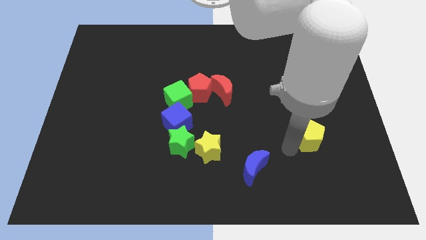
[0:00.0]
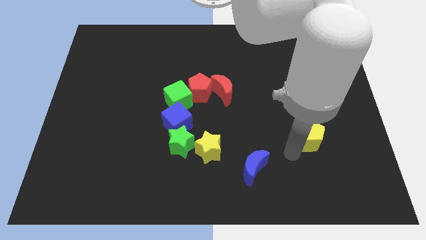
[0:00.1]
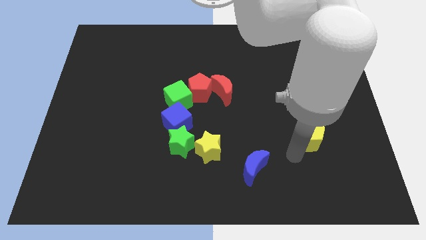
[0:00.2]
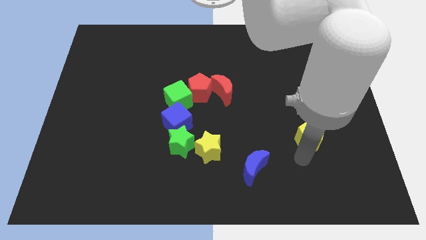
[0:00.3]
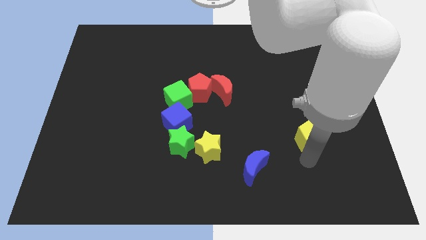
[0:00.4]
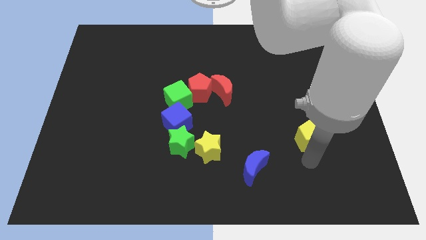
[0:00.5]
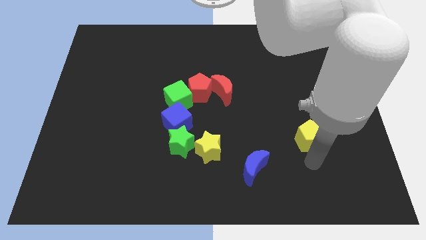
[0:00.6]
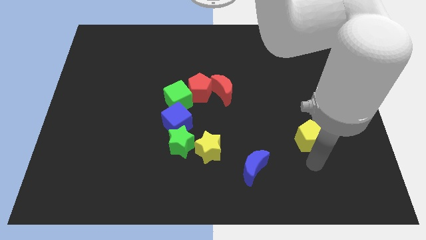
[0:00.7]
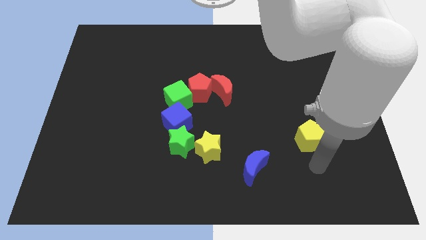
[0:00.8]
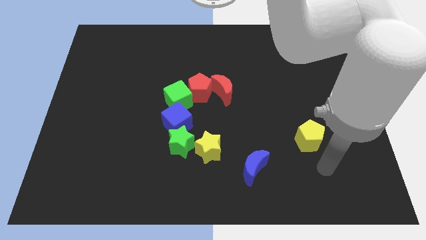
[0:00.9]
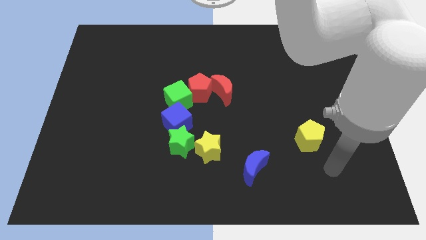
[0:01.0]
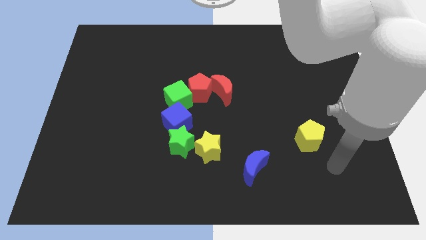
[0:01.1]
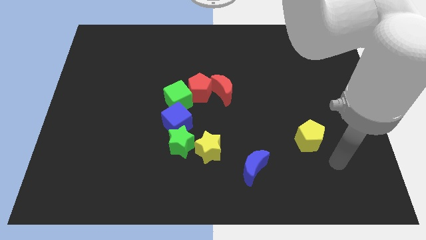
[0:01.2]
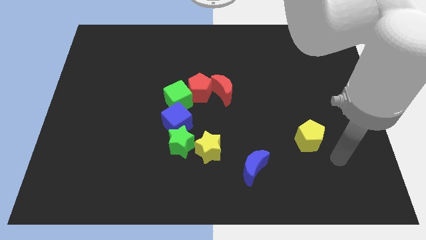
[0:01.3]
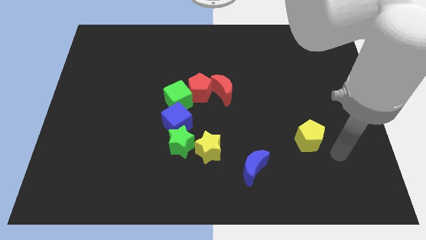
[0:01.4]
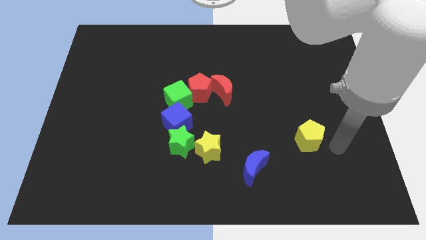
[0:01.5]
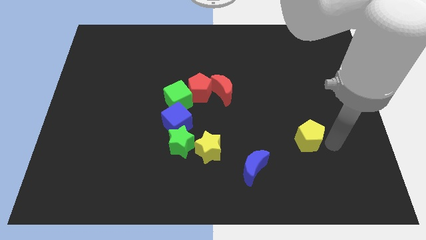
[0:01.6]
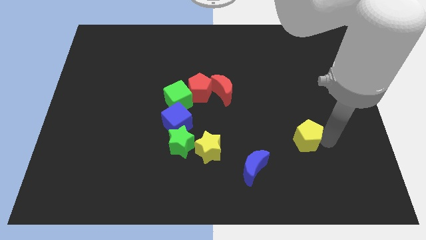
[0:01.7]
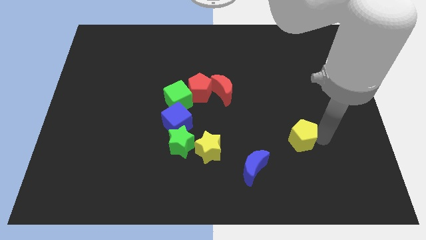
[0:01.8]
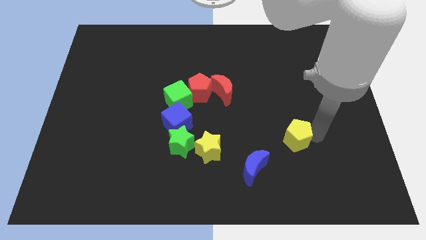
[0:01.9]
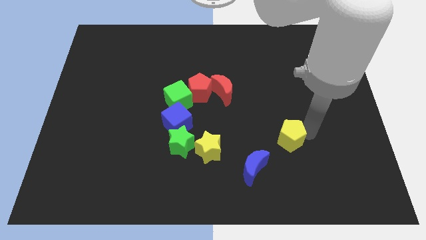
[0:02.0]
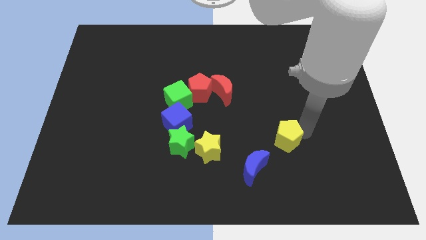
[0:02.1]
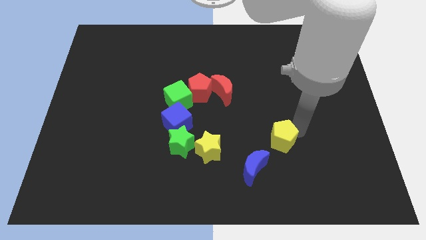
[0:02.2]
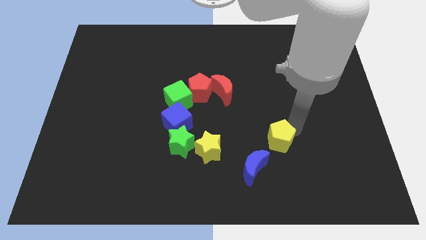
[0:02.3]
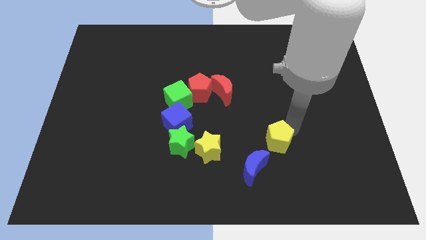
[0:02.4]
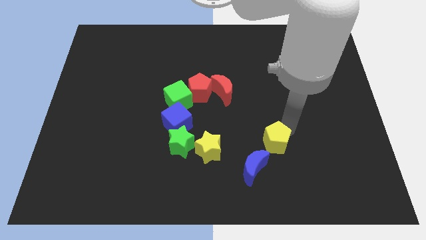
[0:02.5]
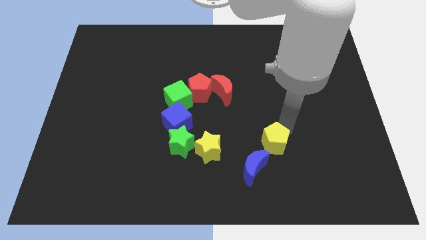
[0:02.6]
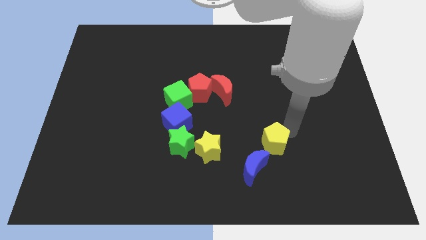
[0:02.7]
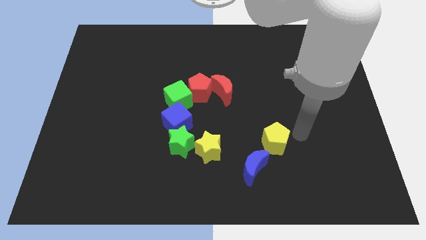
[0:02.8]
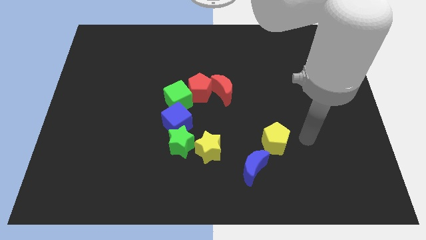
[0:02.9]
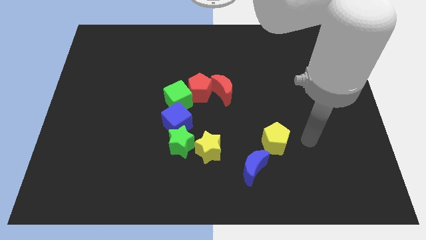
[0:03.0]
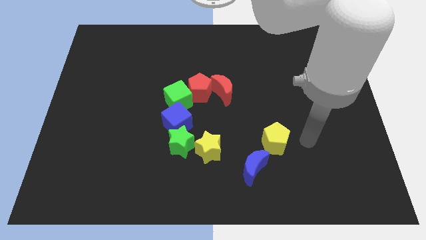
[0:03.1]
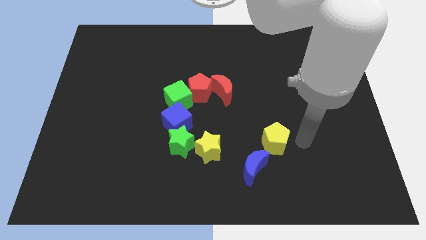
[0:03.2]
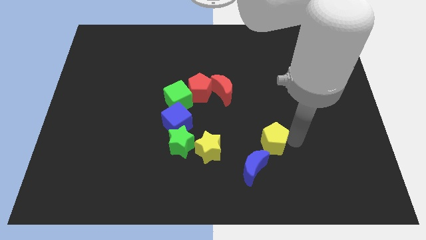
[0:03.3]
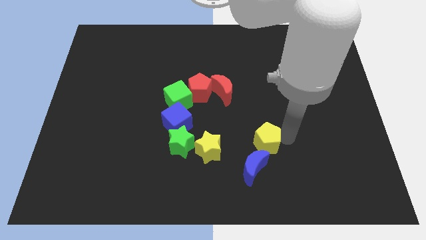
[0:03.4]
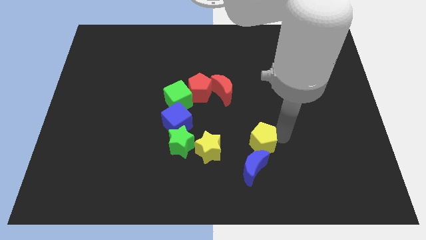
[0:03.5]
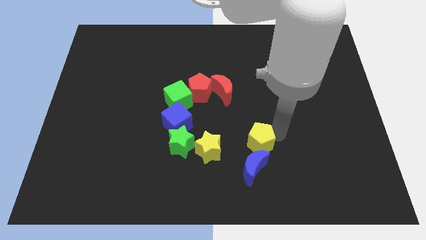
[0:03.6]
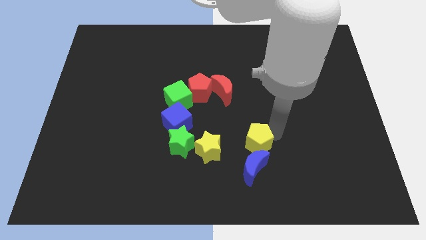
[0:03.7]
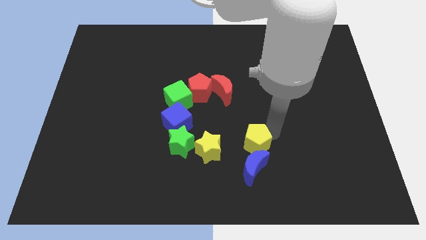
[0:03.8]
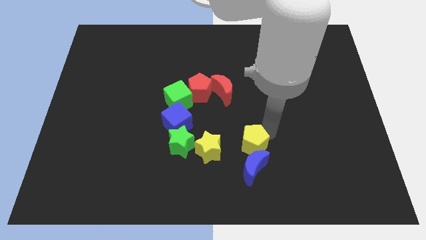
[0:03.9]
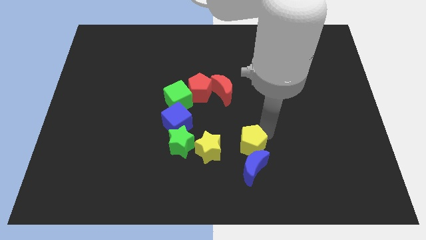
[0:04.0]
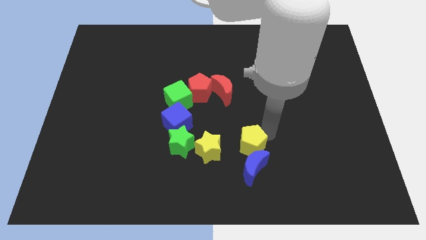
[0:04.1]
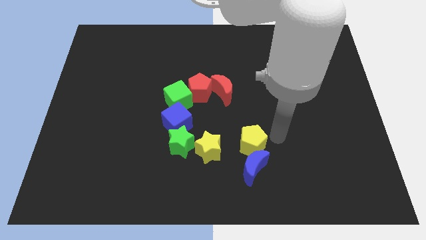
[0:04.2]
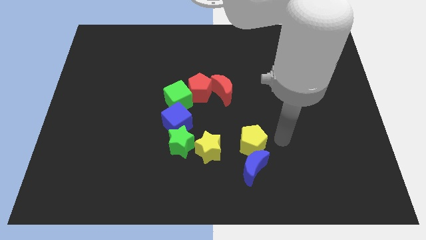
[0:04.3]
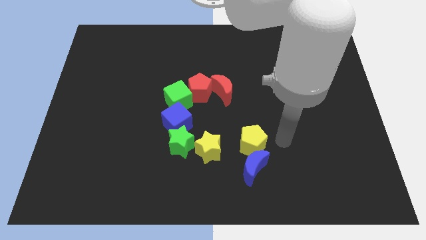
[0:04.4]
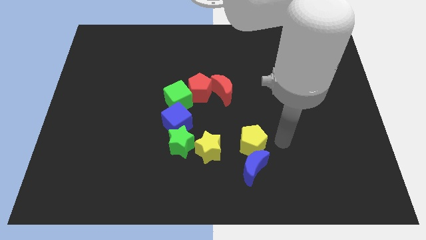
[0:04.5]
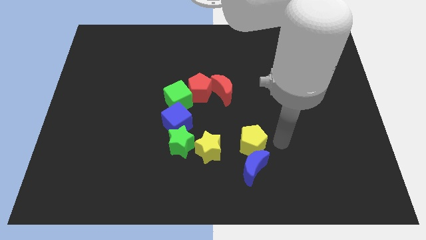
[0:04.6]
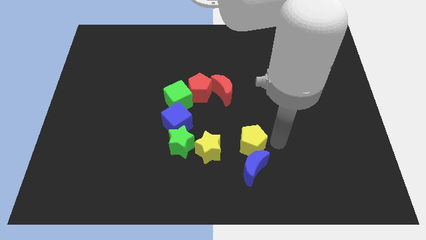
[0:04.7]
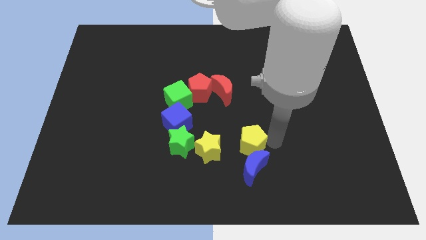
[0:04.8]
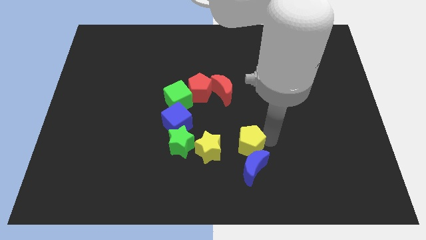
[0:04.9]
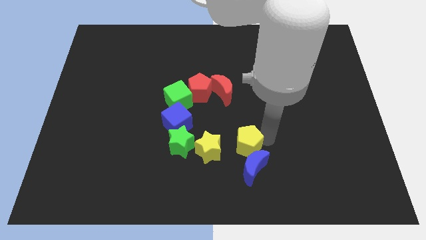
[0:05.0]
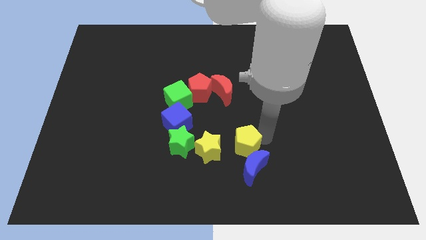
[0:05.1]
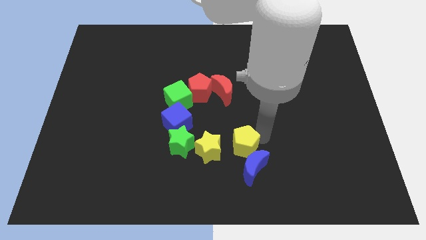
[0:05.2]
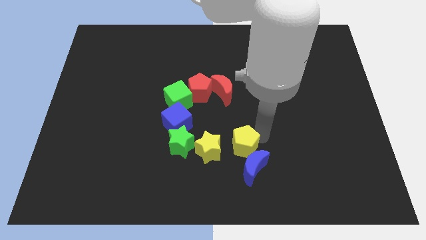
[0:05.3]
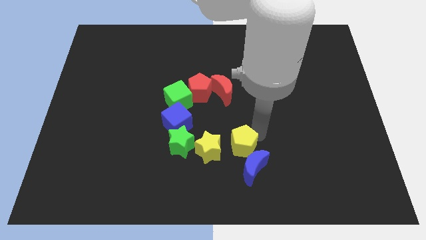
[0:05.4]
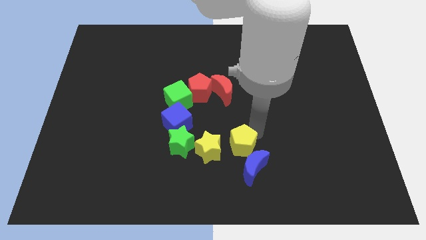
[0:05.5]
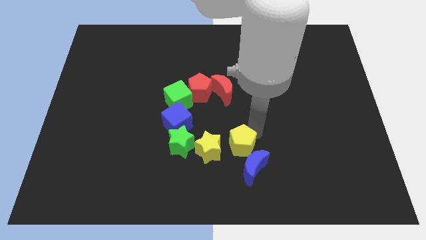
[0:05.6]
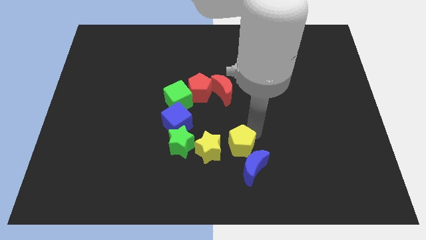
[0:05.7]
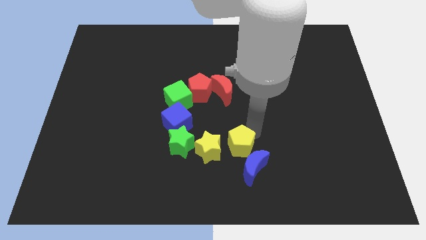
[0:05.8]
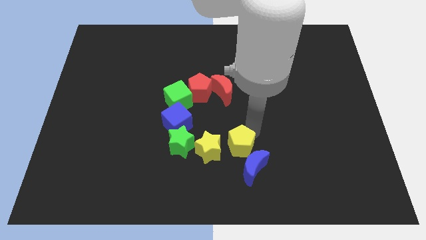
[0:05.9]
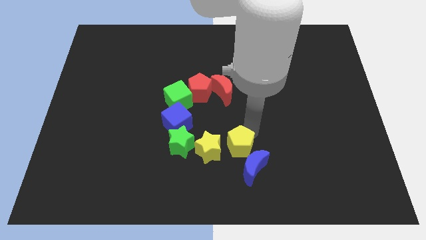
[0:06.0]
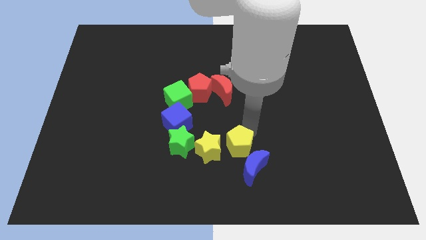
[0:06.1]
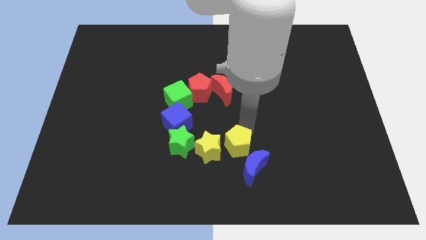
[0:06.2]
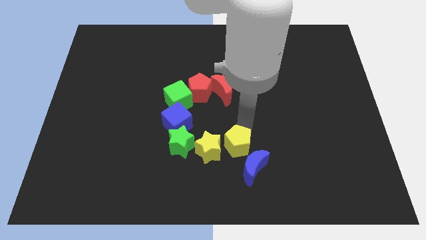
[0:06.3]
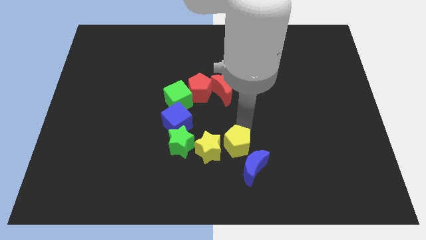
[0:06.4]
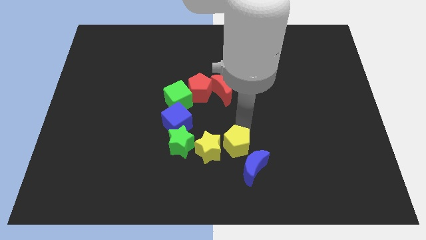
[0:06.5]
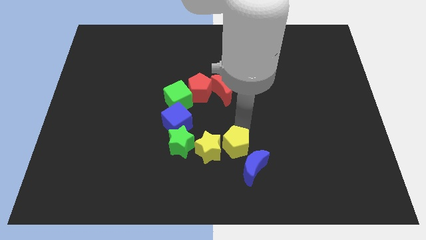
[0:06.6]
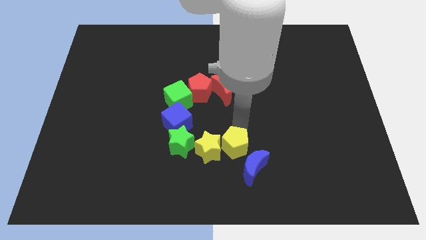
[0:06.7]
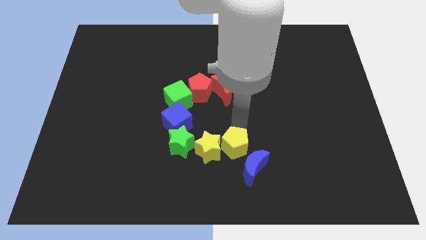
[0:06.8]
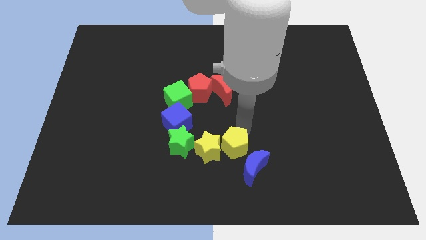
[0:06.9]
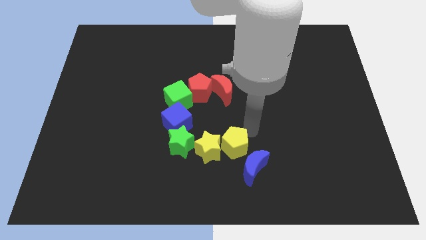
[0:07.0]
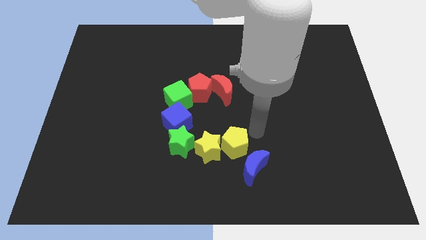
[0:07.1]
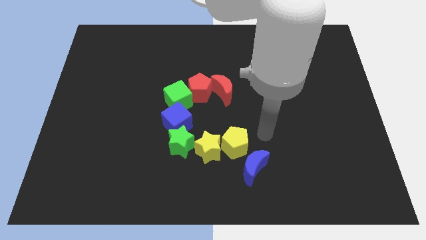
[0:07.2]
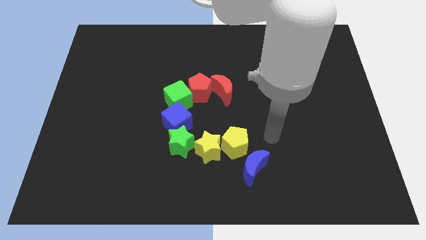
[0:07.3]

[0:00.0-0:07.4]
push the yellow pentagon to the right side of the yellow star

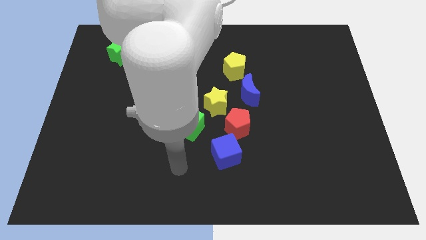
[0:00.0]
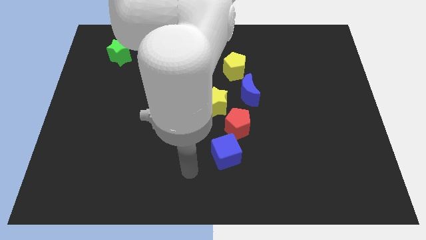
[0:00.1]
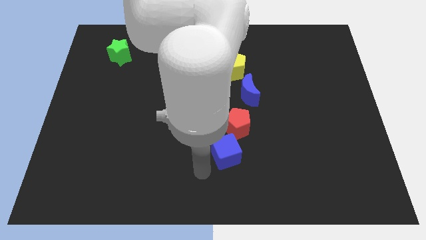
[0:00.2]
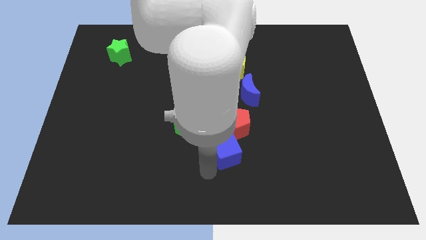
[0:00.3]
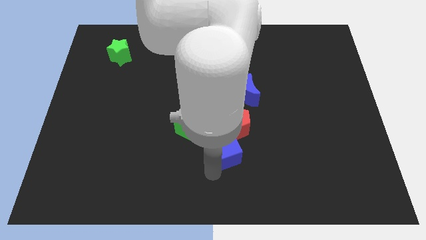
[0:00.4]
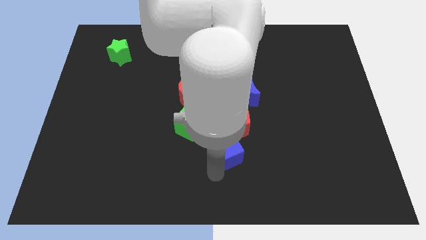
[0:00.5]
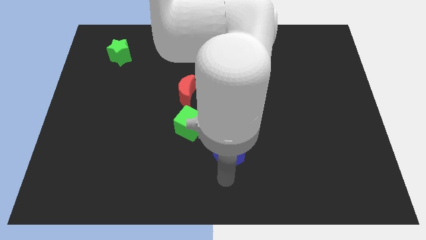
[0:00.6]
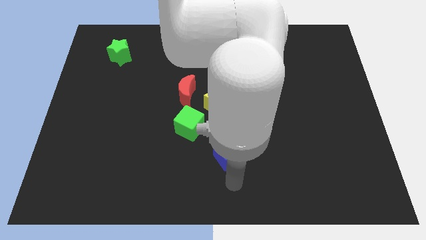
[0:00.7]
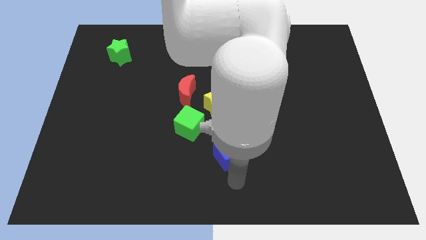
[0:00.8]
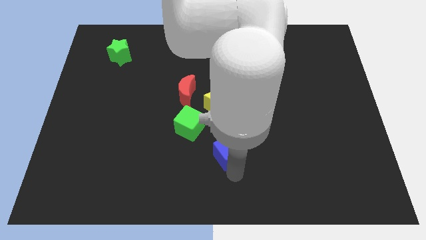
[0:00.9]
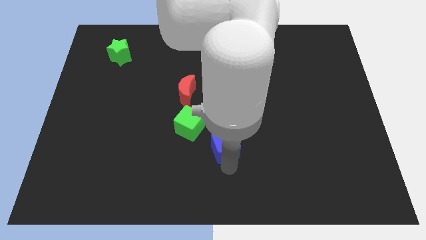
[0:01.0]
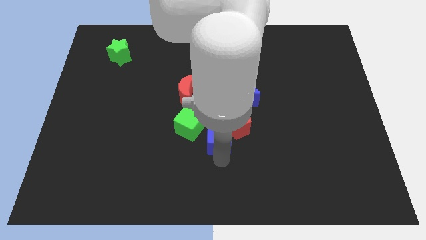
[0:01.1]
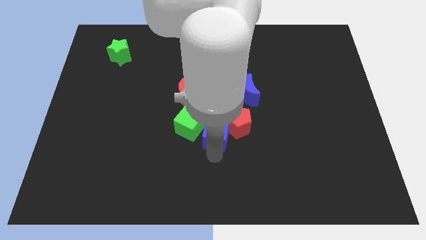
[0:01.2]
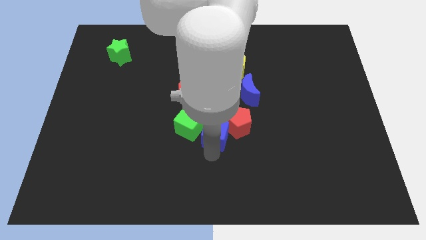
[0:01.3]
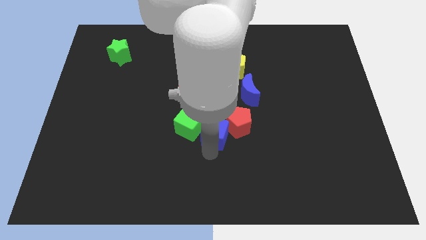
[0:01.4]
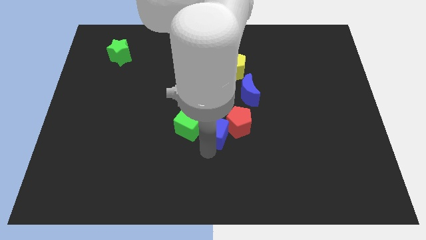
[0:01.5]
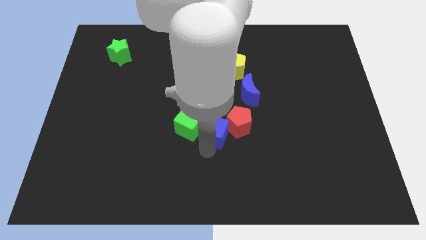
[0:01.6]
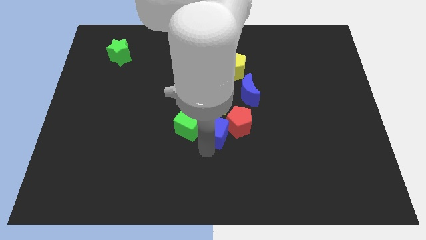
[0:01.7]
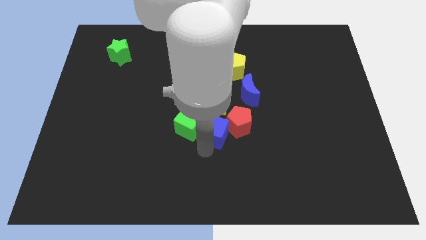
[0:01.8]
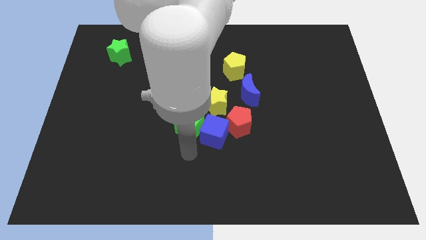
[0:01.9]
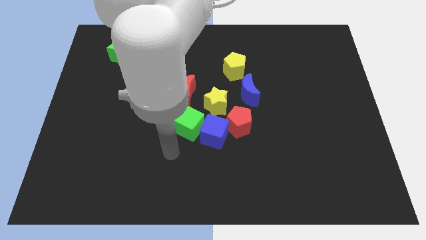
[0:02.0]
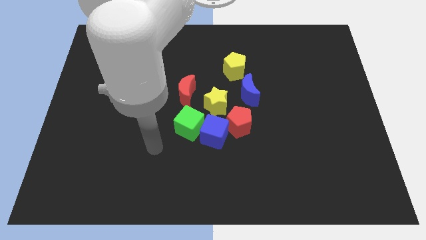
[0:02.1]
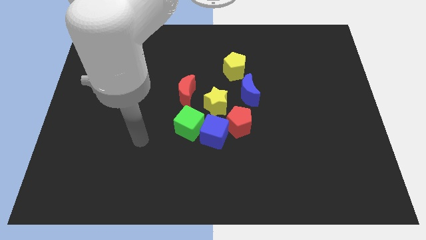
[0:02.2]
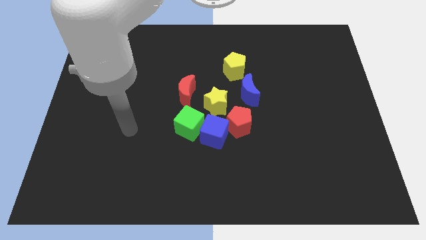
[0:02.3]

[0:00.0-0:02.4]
push the blue cube between red pentagon and green cube
